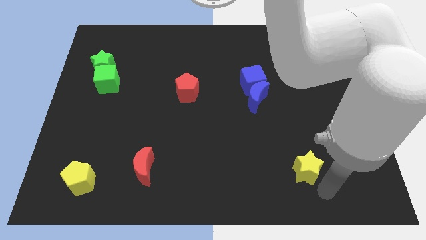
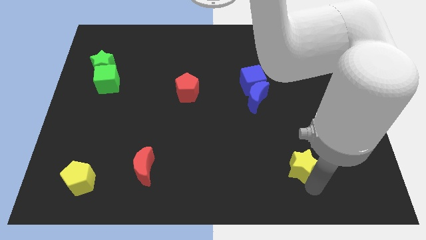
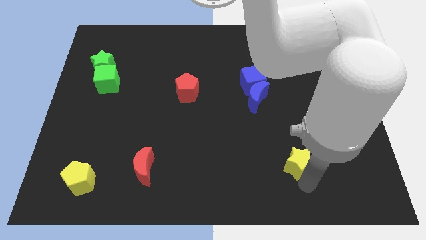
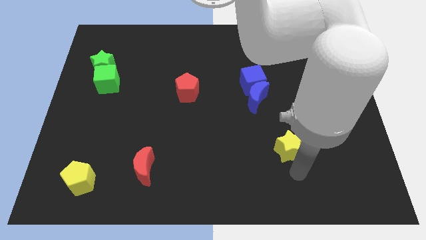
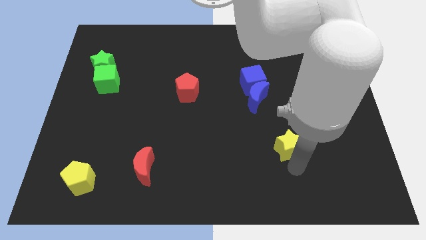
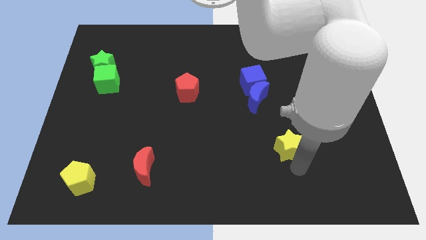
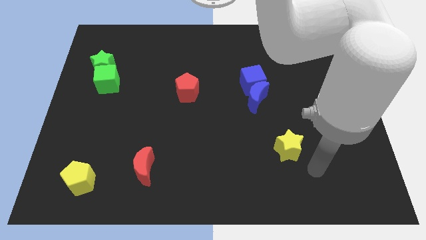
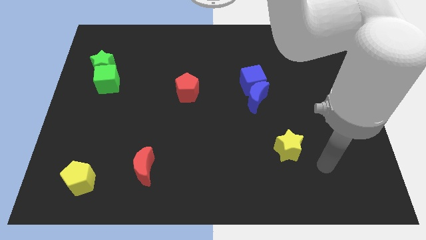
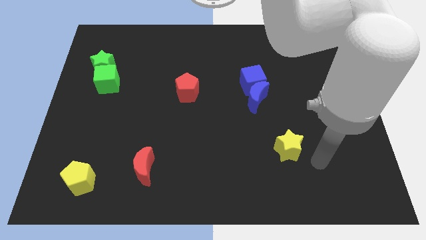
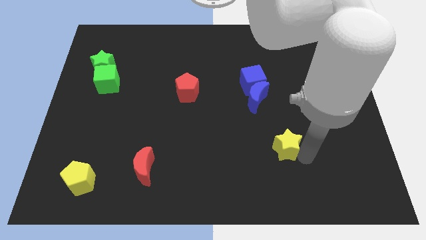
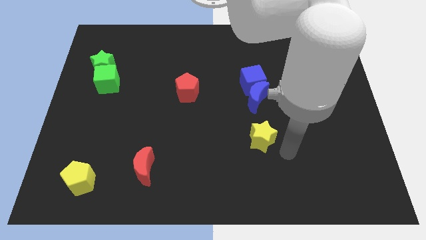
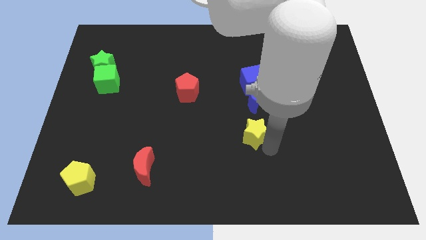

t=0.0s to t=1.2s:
move the yellow star towards the center to the board

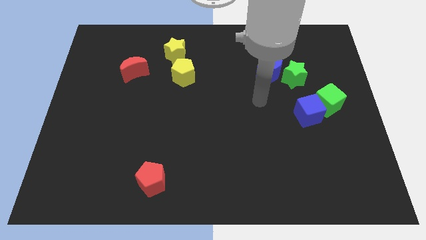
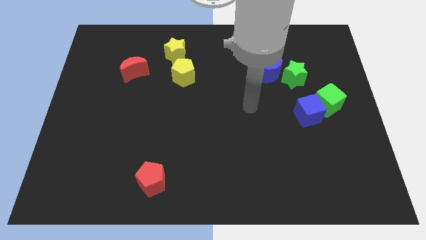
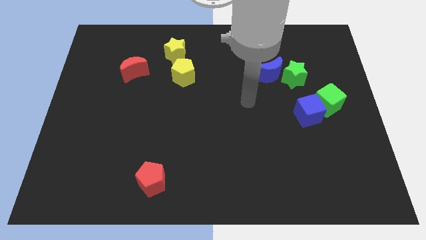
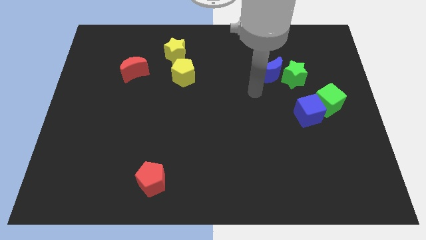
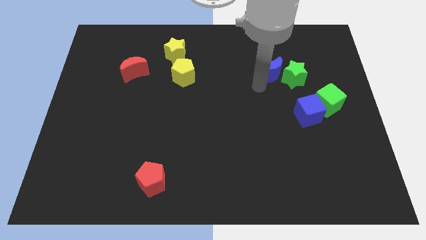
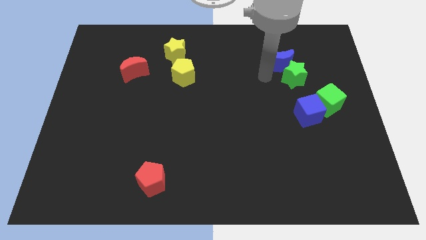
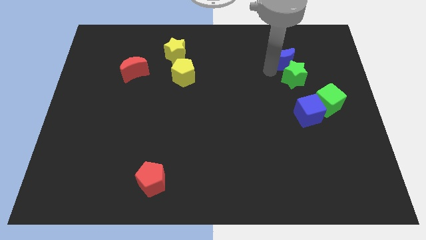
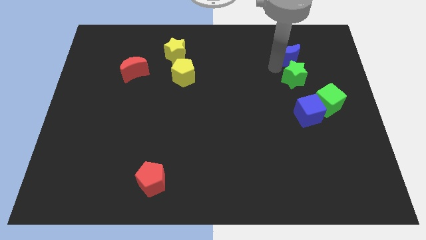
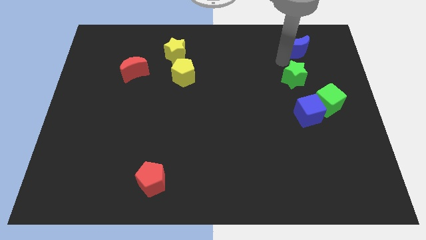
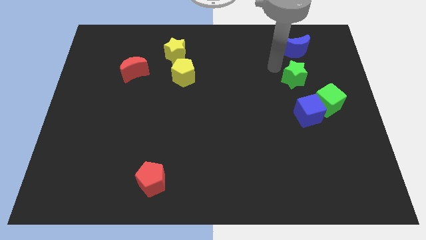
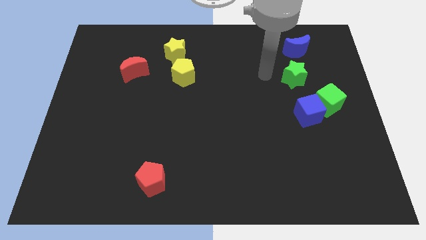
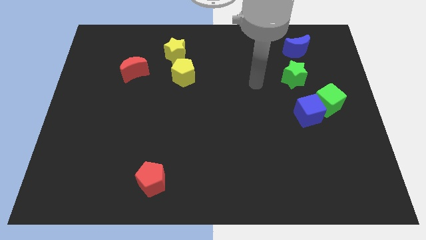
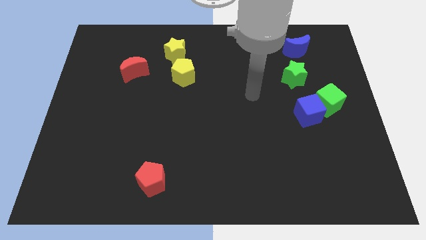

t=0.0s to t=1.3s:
place the blue moon to the top side of the green star

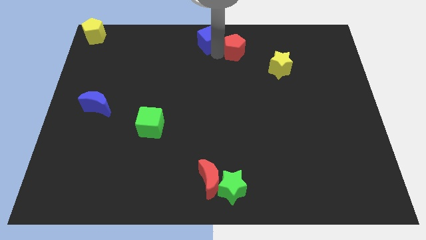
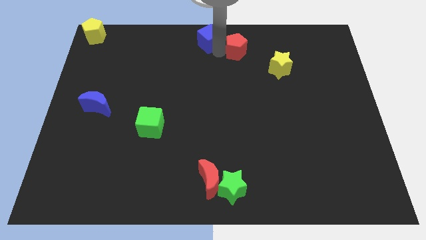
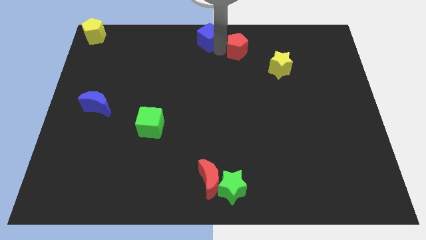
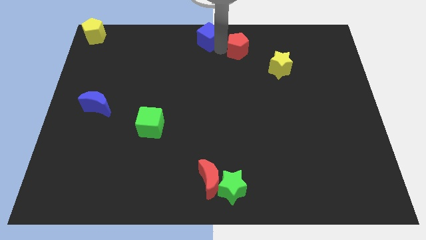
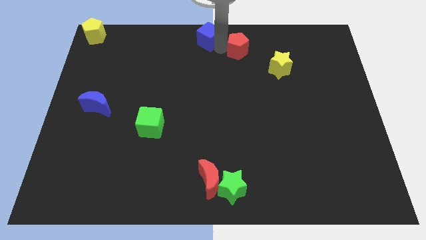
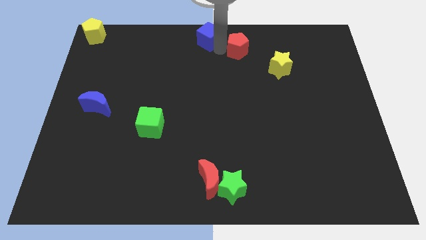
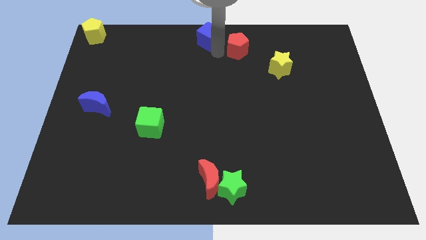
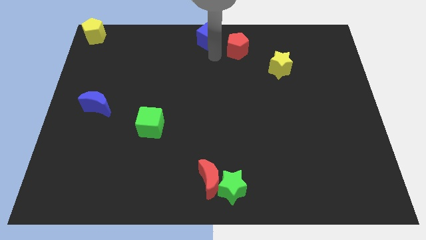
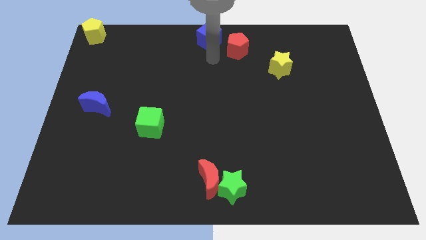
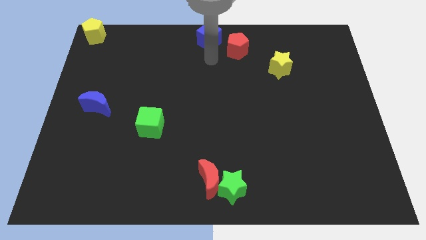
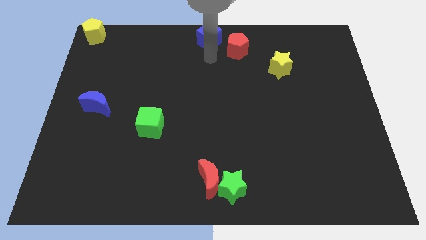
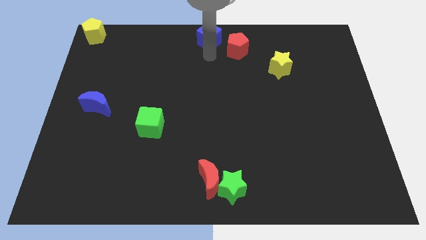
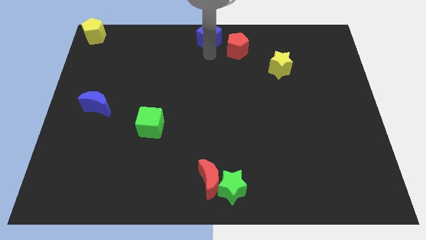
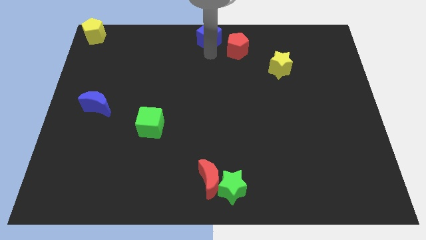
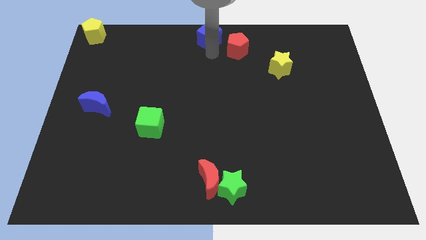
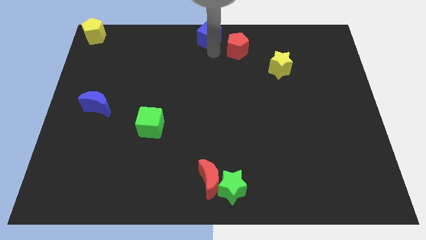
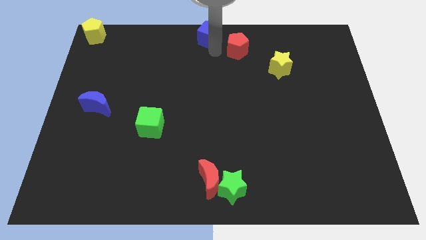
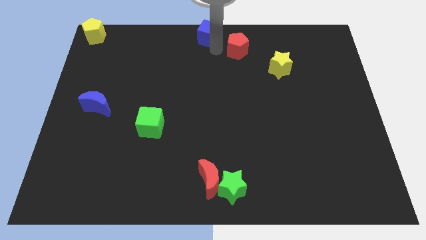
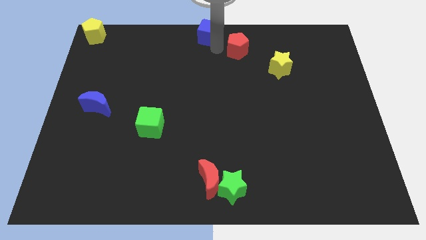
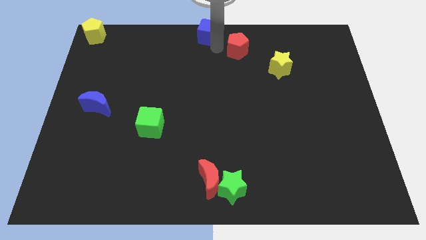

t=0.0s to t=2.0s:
push the blue cube to the top center of the board

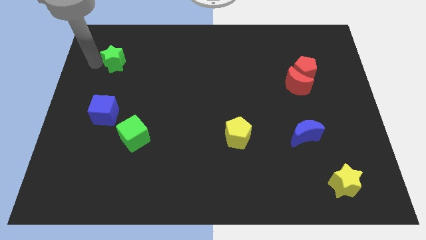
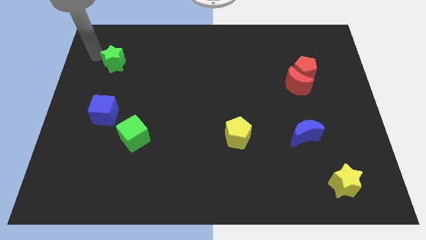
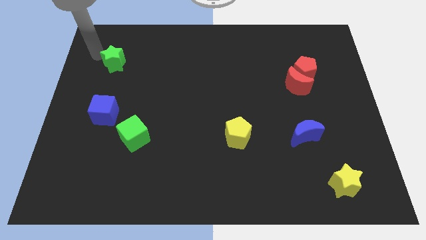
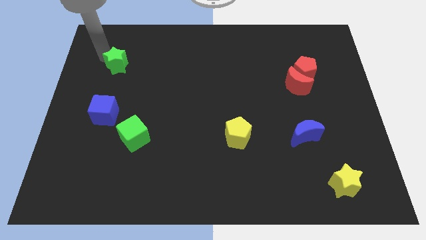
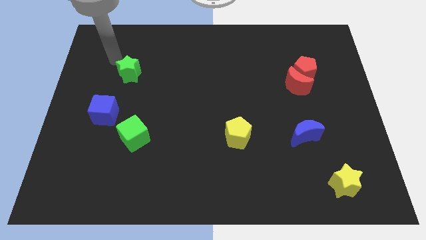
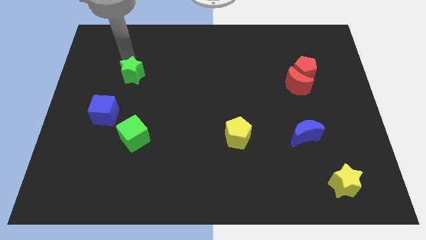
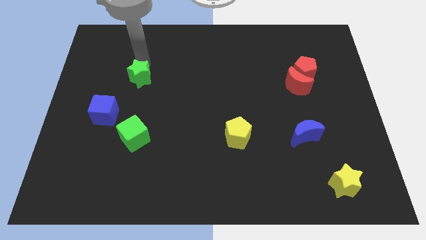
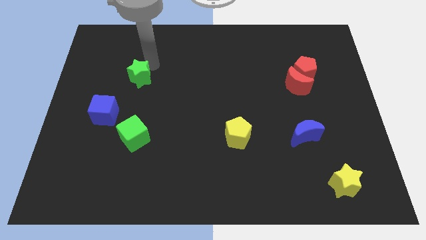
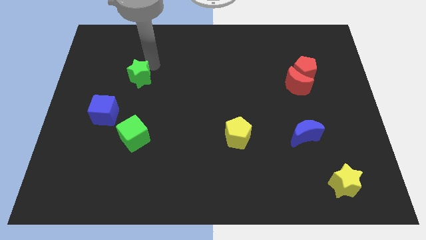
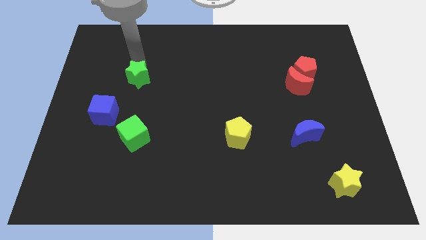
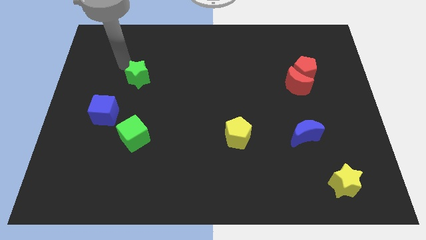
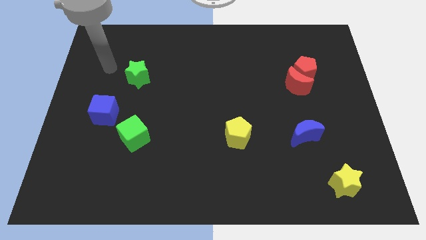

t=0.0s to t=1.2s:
place green star to the top of green cube

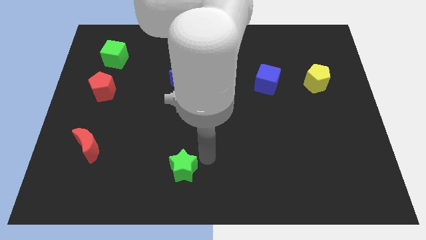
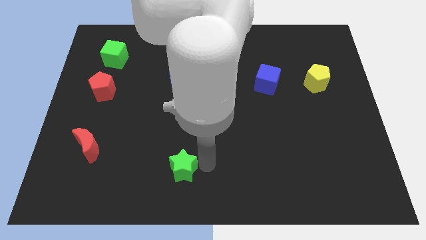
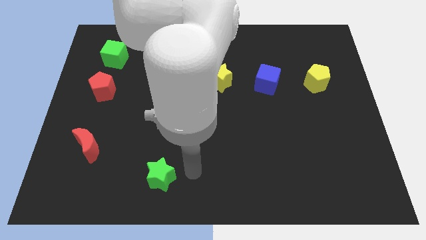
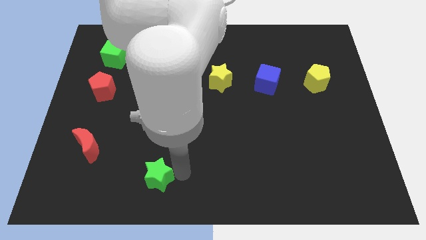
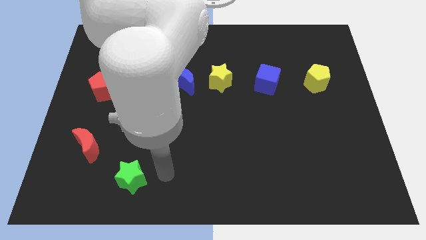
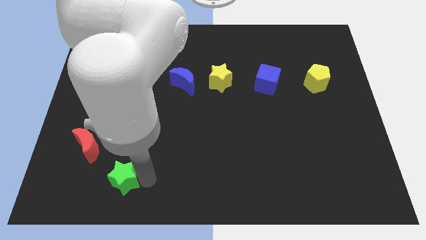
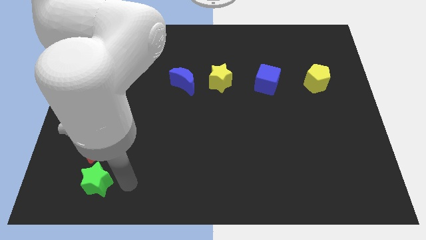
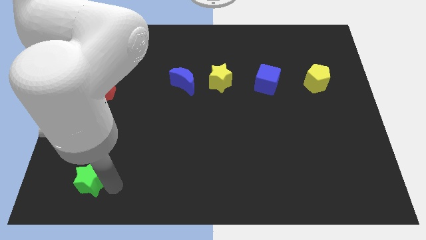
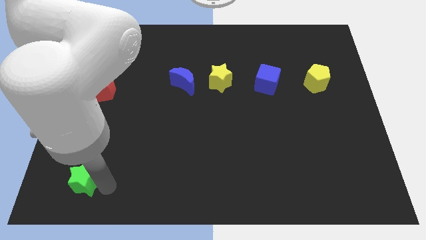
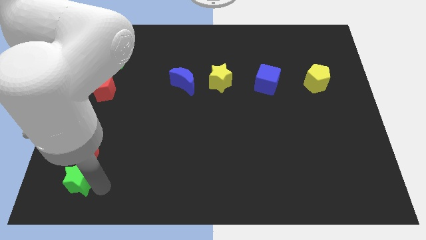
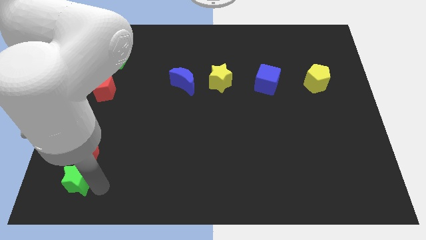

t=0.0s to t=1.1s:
place the green star below the red moon

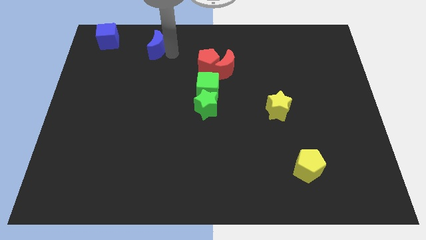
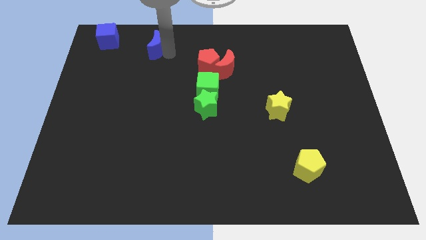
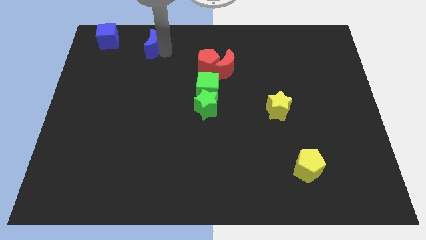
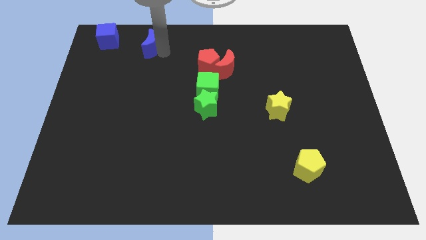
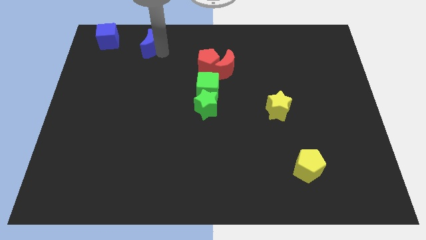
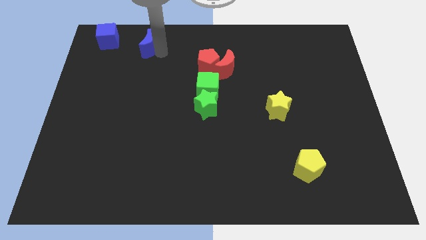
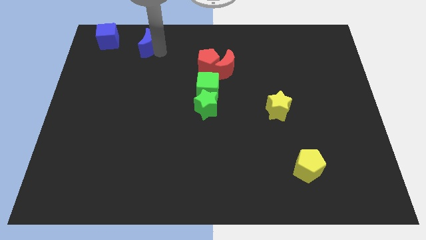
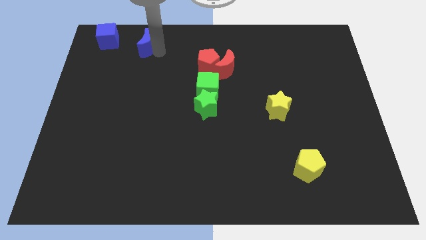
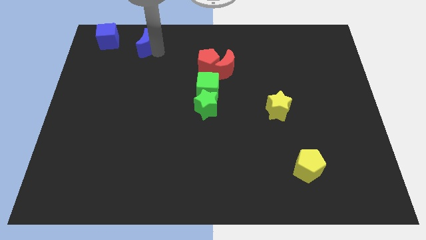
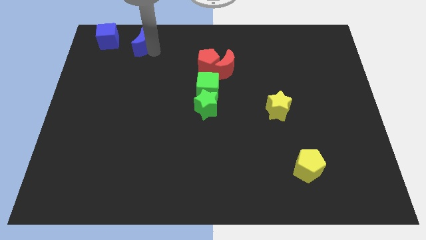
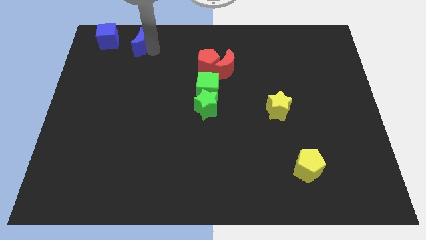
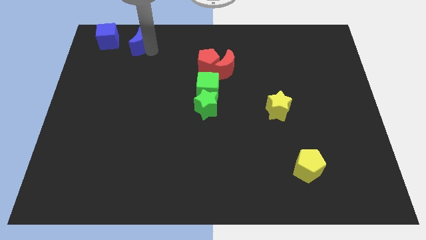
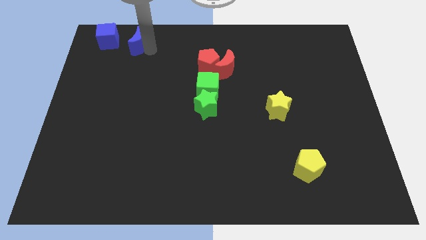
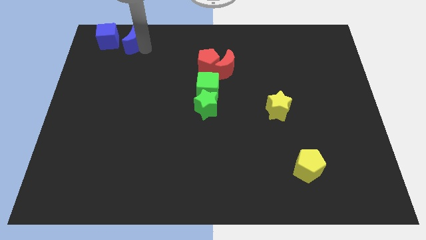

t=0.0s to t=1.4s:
slide the blue crescent towards the blue cube

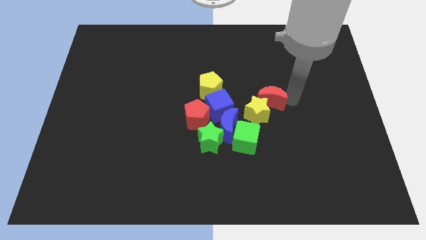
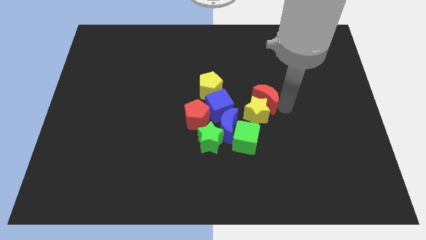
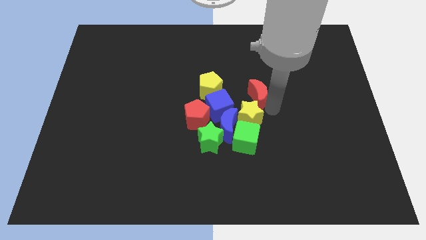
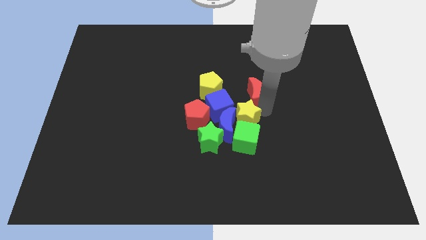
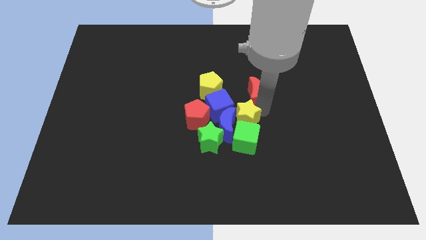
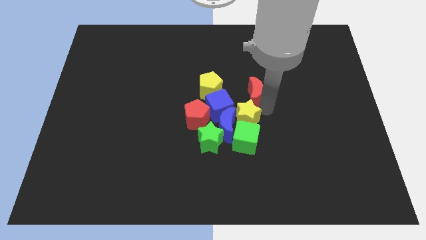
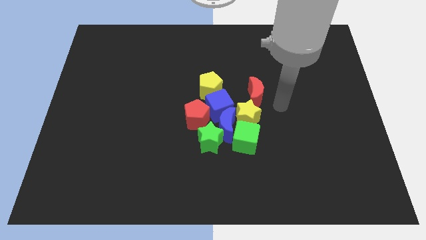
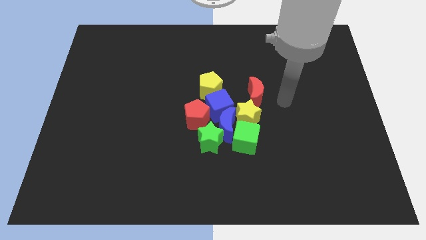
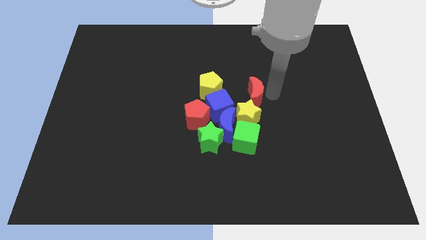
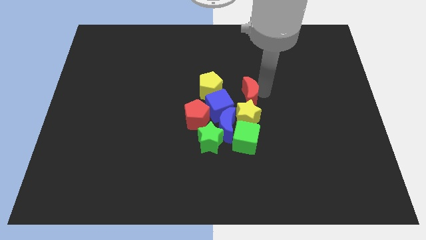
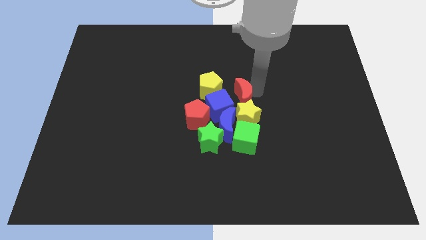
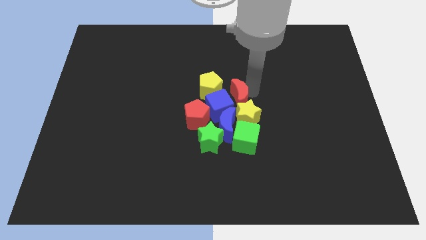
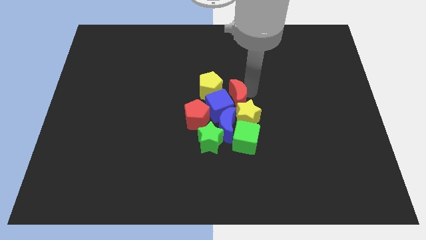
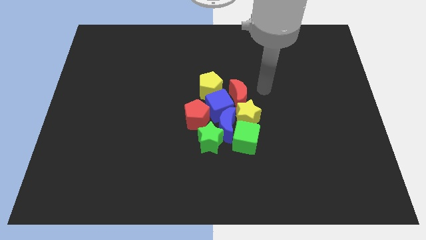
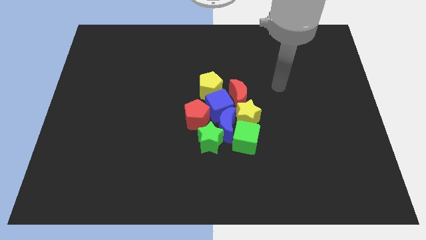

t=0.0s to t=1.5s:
place the red moon to the right side of the blue cube
